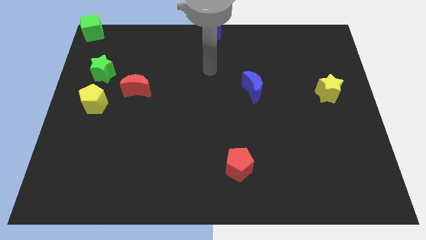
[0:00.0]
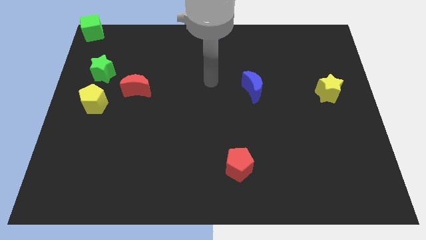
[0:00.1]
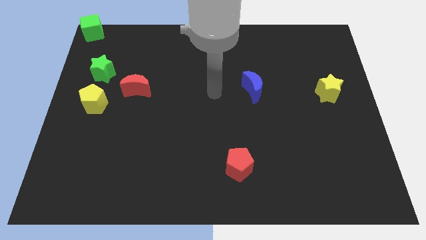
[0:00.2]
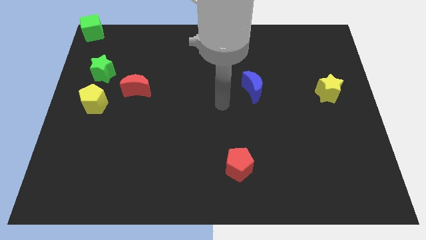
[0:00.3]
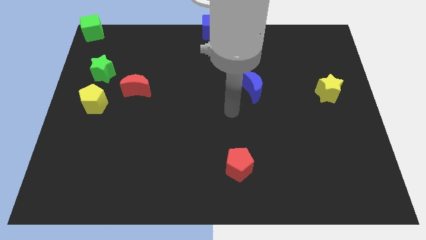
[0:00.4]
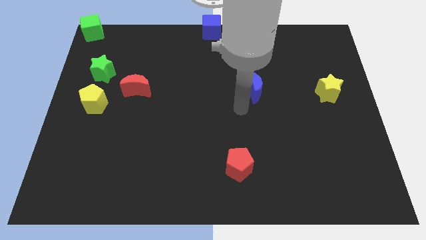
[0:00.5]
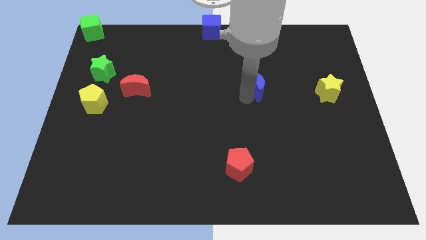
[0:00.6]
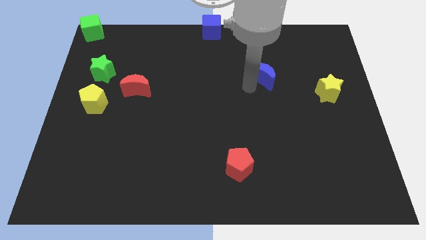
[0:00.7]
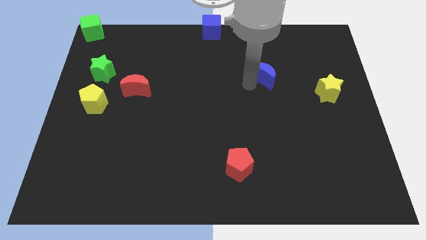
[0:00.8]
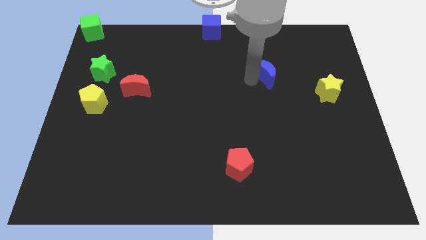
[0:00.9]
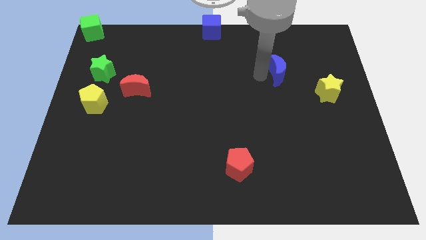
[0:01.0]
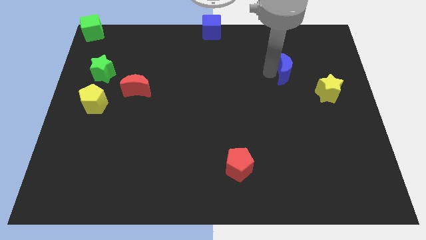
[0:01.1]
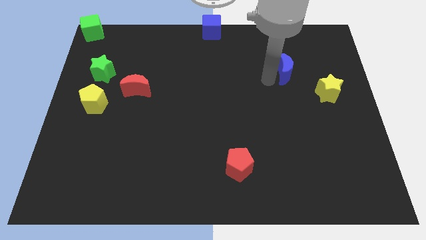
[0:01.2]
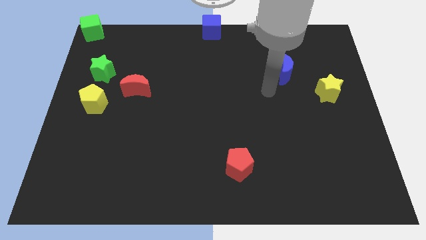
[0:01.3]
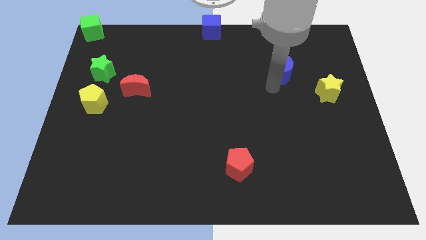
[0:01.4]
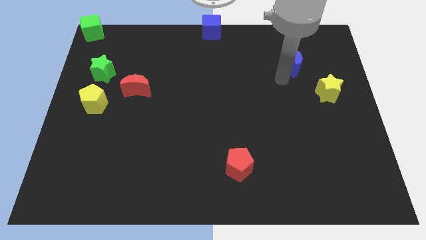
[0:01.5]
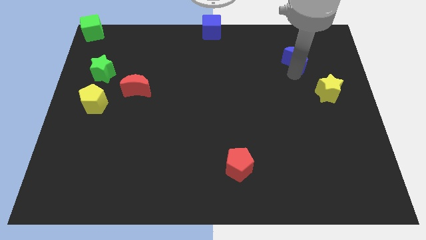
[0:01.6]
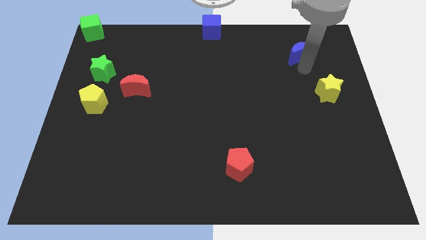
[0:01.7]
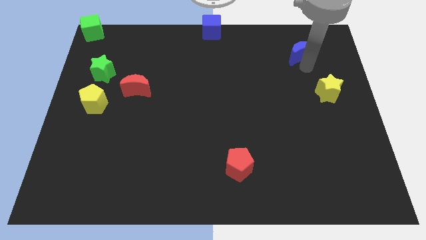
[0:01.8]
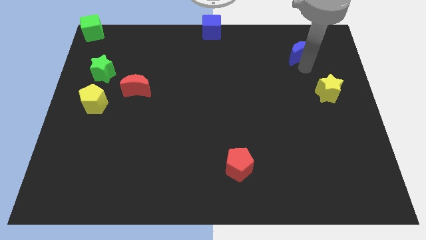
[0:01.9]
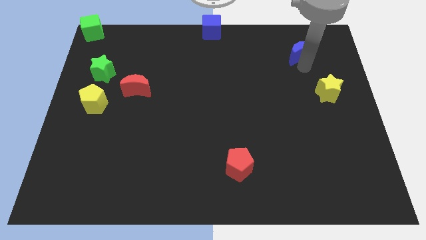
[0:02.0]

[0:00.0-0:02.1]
place the blue crescent top left to the yellow star

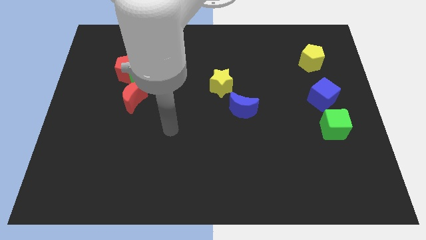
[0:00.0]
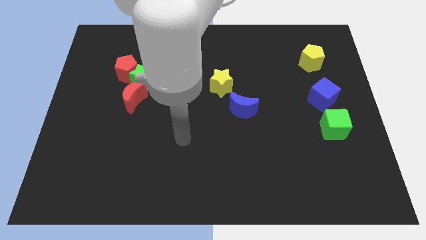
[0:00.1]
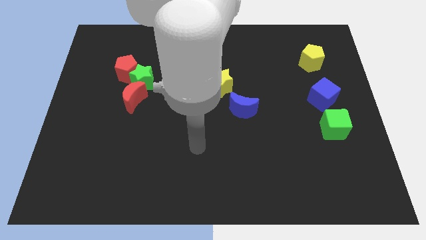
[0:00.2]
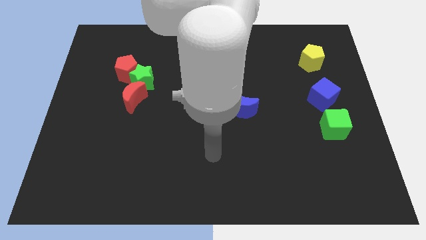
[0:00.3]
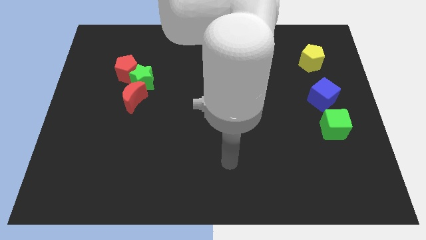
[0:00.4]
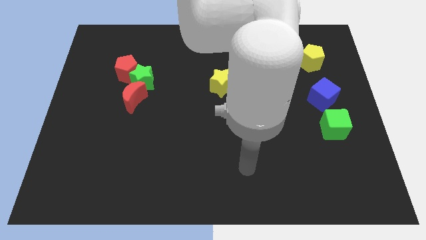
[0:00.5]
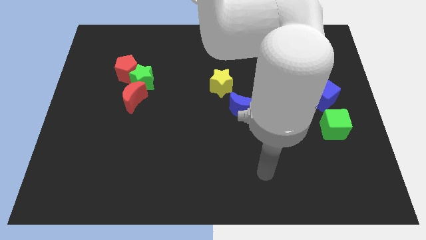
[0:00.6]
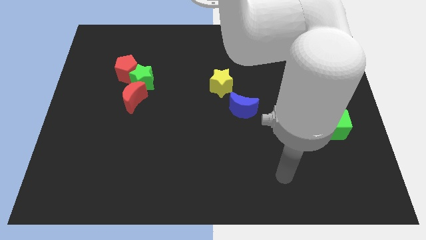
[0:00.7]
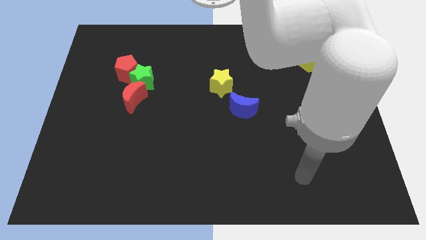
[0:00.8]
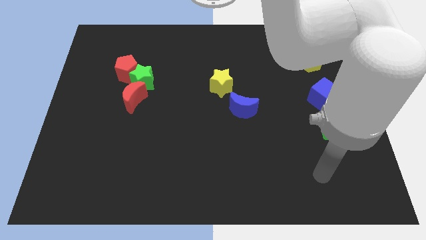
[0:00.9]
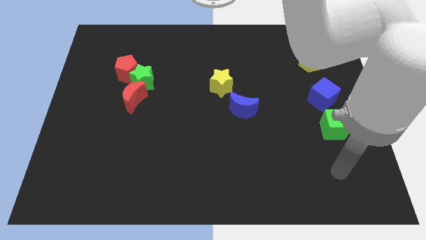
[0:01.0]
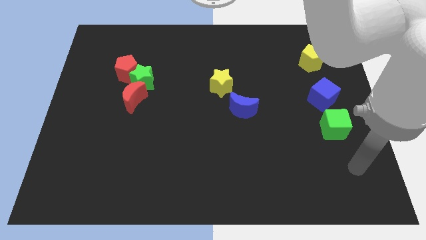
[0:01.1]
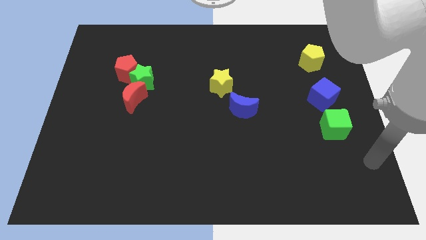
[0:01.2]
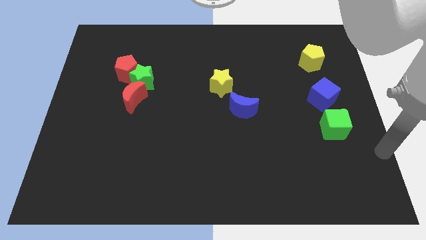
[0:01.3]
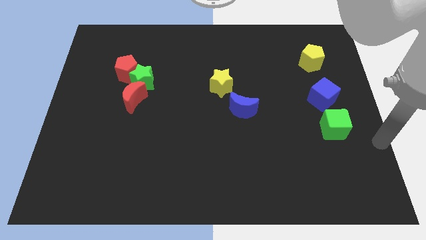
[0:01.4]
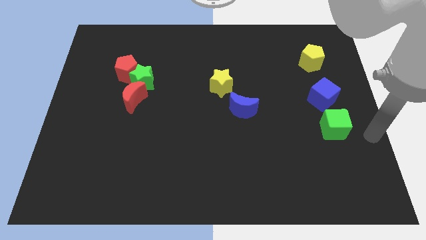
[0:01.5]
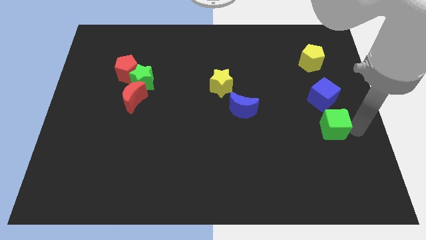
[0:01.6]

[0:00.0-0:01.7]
move your arm to the right side of the green cube

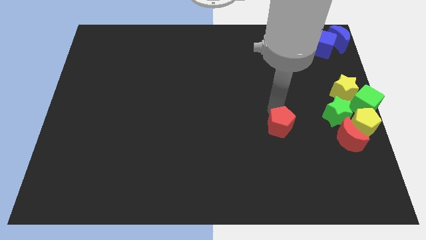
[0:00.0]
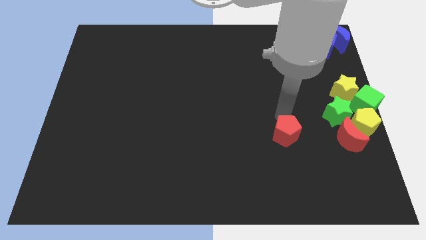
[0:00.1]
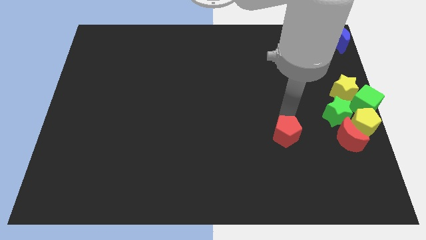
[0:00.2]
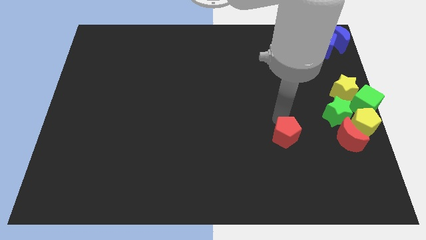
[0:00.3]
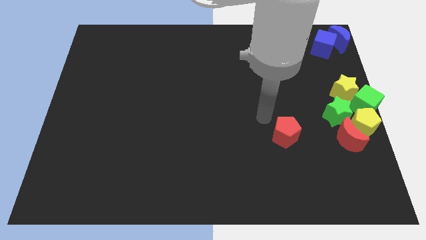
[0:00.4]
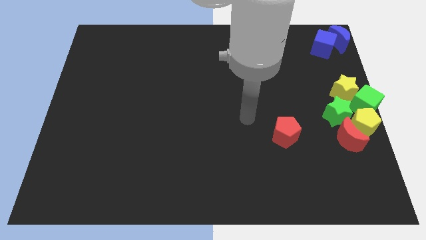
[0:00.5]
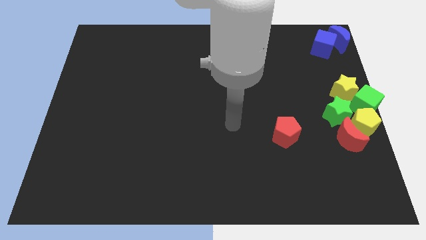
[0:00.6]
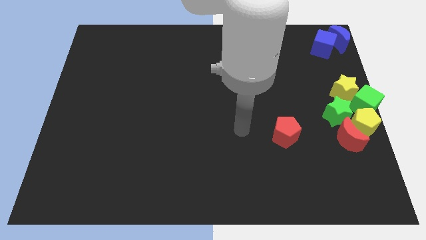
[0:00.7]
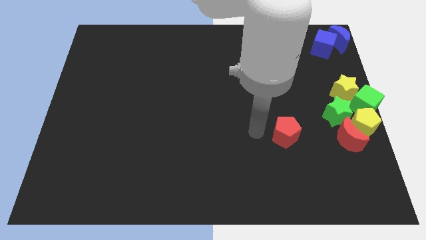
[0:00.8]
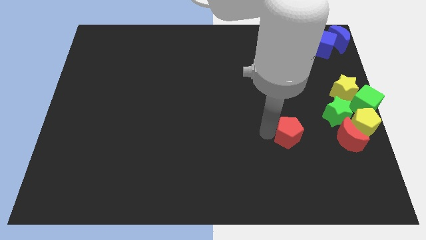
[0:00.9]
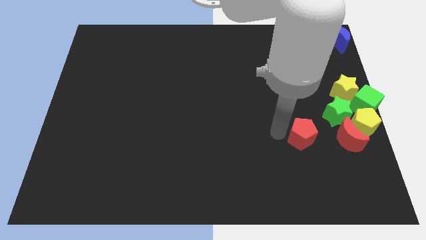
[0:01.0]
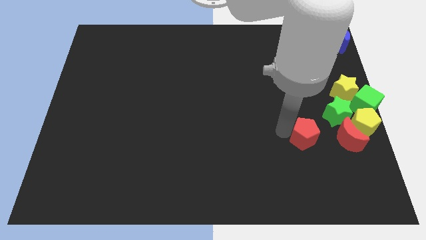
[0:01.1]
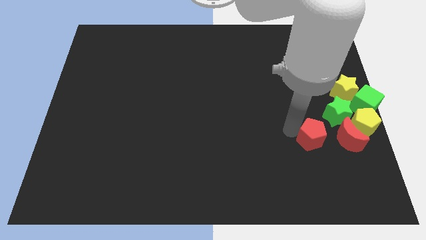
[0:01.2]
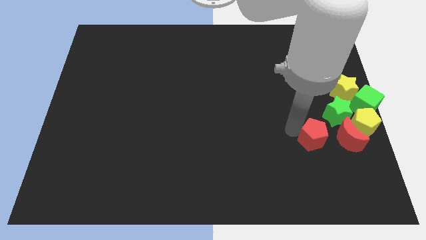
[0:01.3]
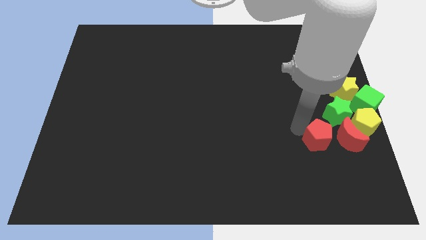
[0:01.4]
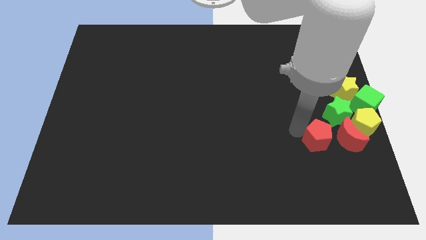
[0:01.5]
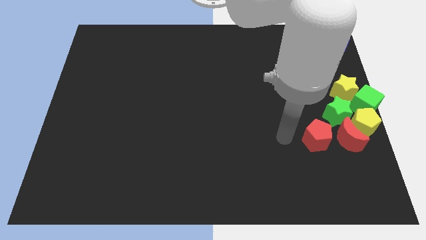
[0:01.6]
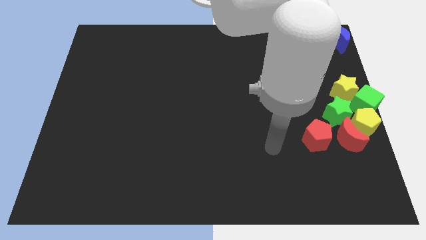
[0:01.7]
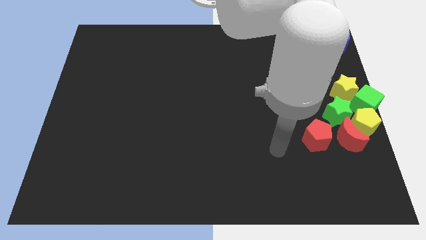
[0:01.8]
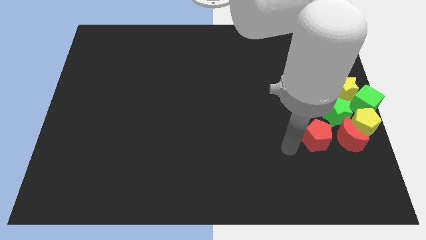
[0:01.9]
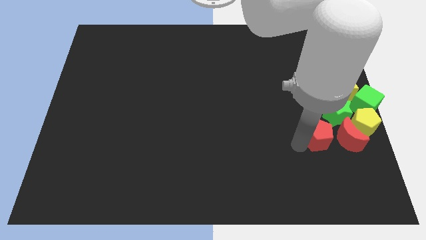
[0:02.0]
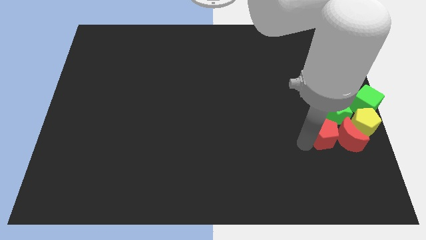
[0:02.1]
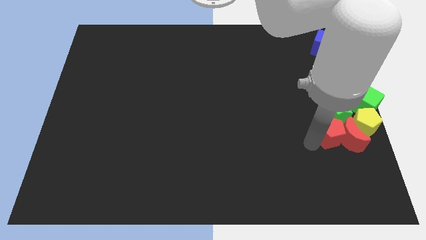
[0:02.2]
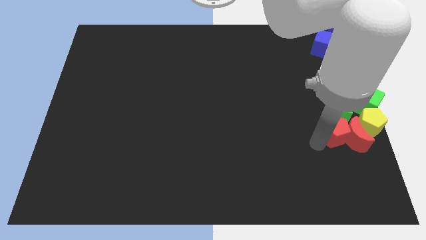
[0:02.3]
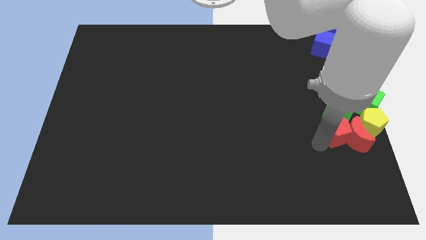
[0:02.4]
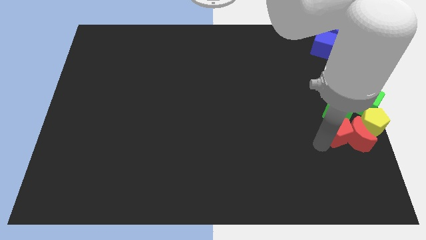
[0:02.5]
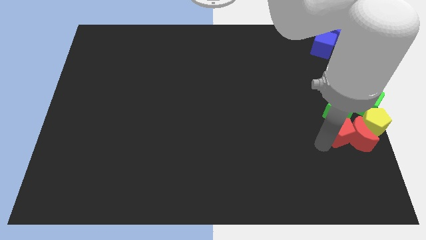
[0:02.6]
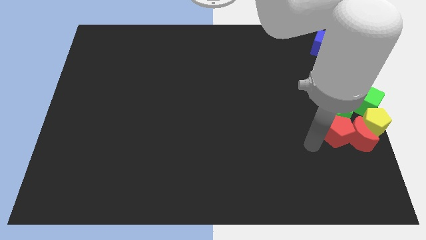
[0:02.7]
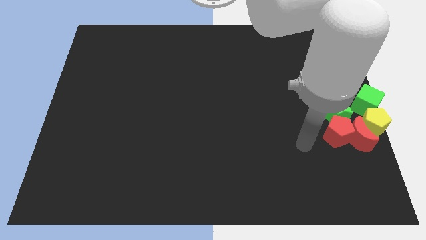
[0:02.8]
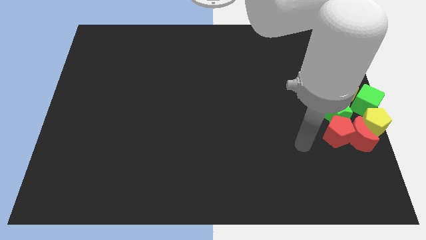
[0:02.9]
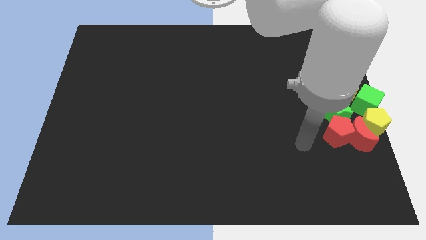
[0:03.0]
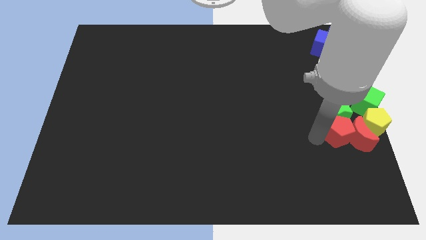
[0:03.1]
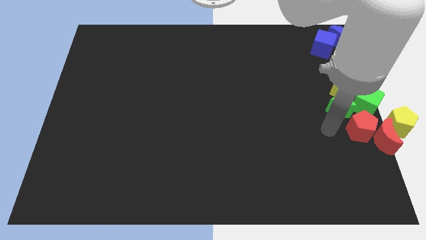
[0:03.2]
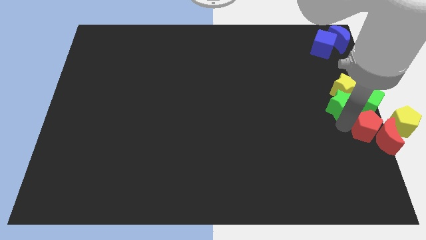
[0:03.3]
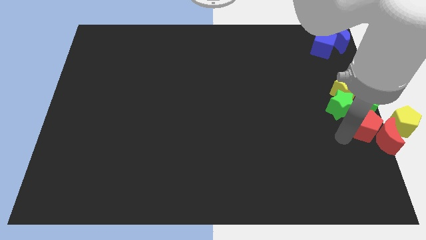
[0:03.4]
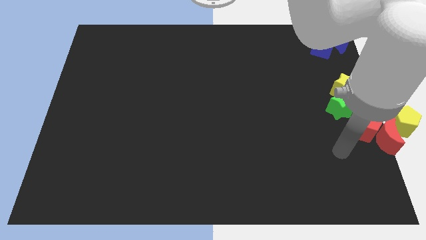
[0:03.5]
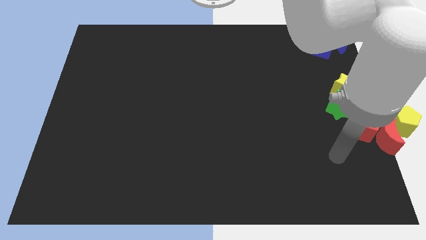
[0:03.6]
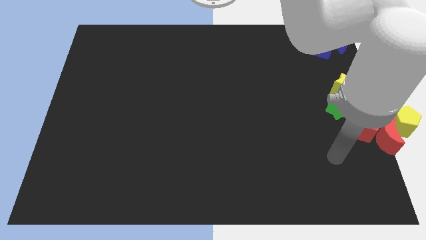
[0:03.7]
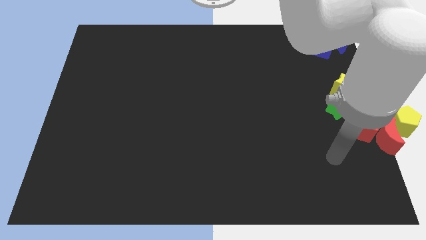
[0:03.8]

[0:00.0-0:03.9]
push the red pentagon into the group of blocks

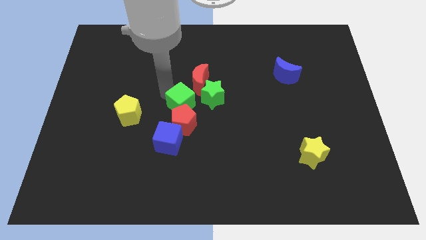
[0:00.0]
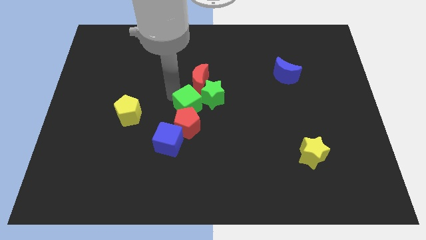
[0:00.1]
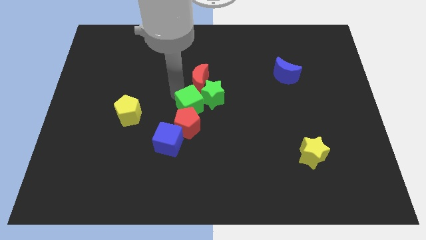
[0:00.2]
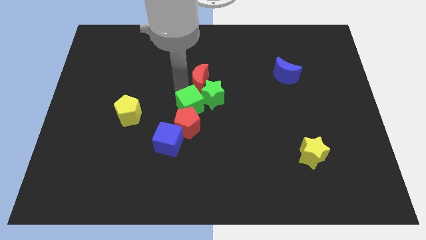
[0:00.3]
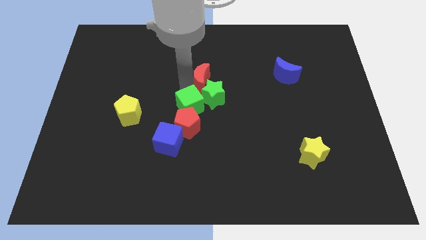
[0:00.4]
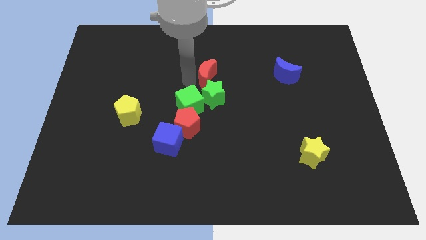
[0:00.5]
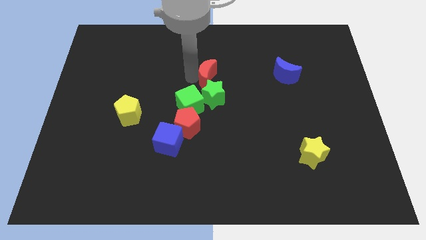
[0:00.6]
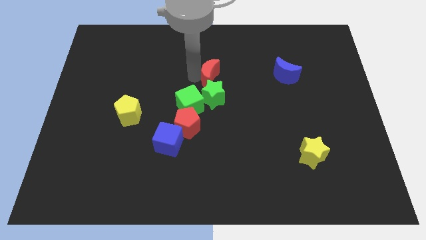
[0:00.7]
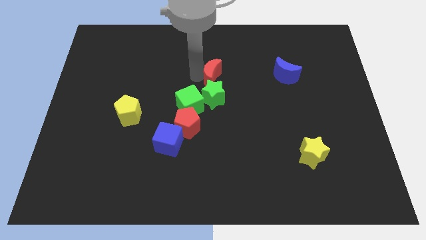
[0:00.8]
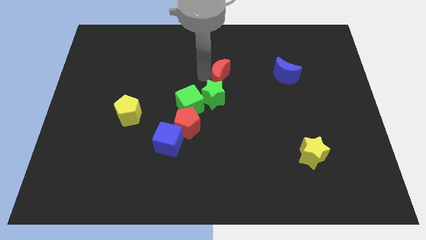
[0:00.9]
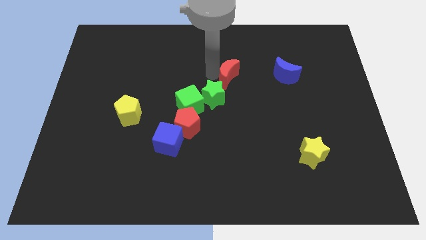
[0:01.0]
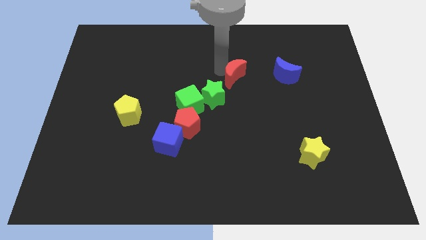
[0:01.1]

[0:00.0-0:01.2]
push the green cube into the red pentagon towards the bottom left of the board
